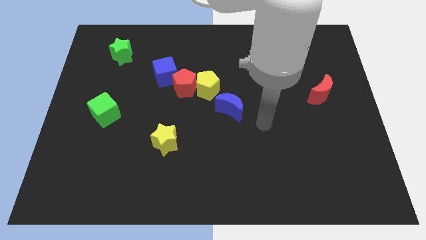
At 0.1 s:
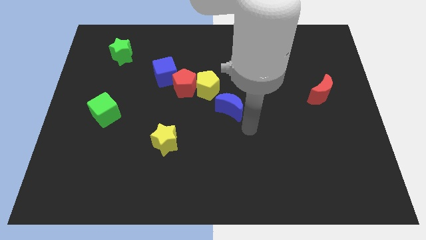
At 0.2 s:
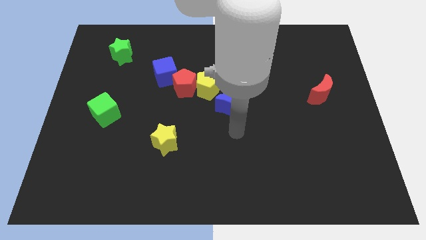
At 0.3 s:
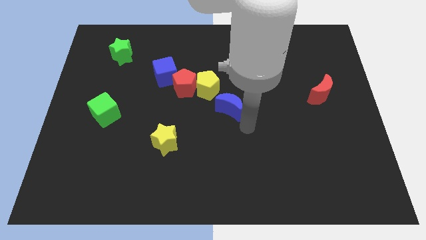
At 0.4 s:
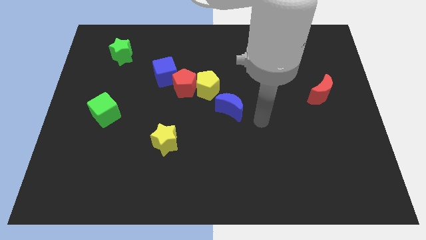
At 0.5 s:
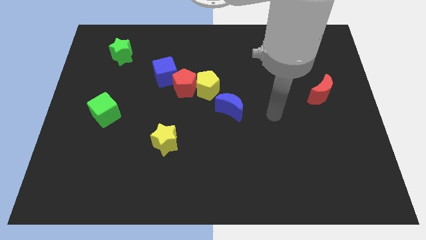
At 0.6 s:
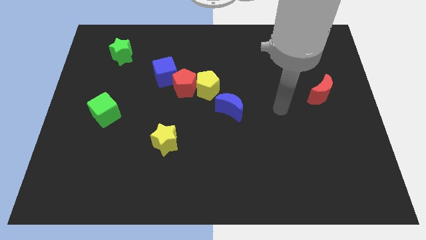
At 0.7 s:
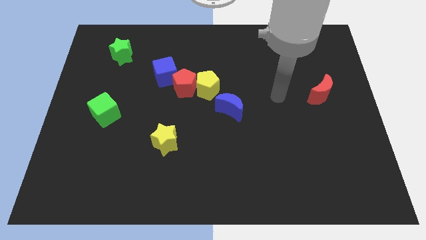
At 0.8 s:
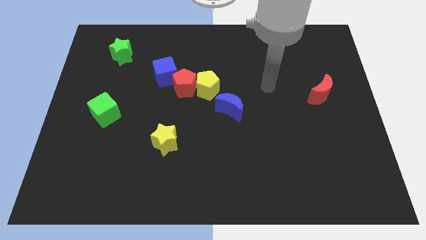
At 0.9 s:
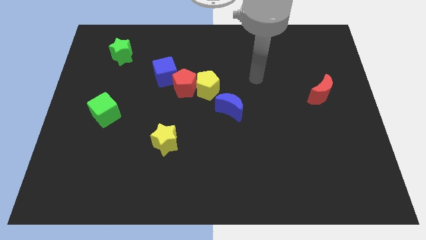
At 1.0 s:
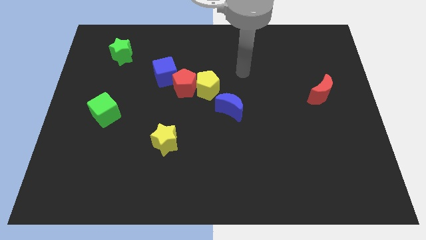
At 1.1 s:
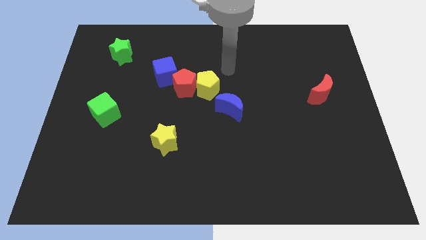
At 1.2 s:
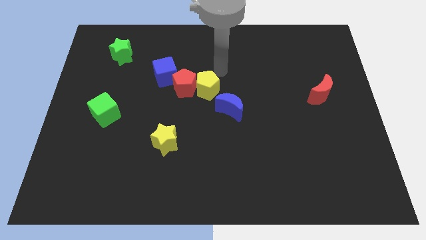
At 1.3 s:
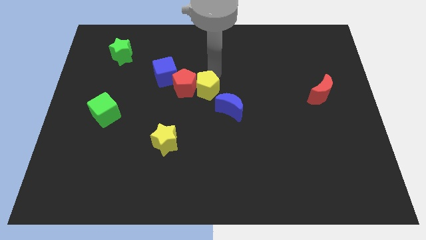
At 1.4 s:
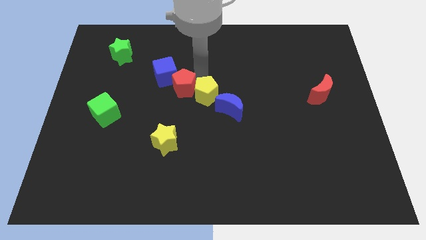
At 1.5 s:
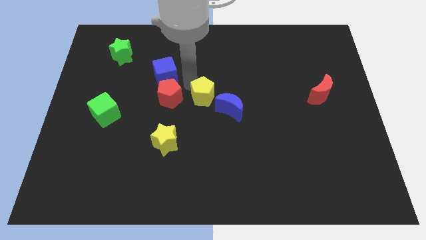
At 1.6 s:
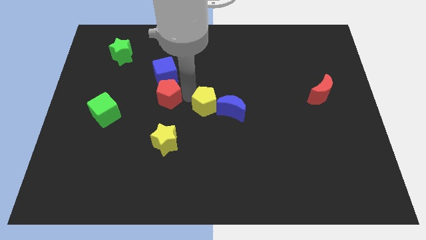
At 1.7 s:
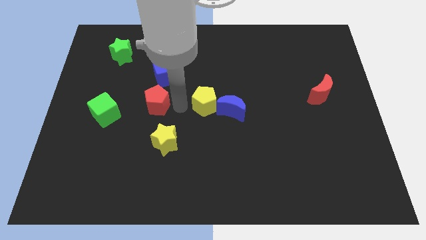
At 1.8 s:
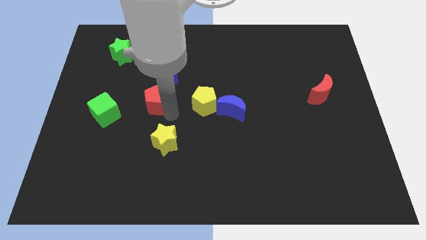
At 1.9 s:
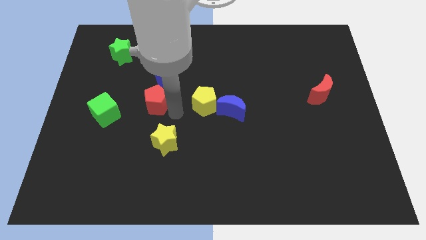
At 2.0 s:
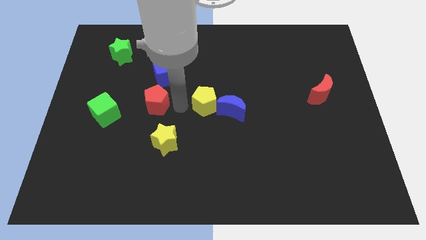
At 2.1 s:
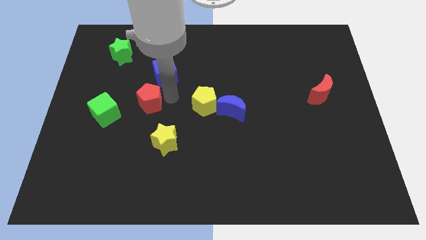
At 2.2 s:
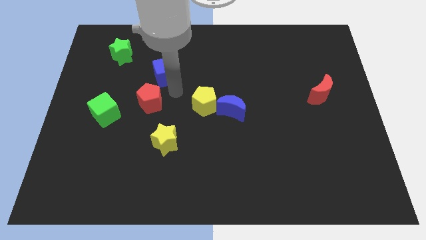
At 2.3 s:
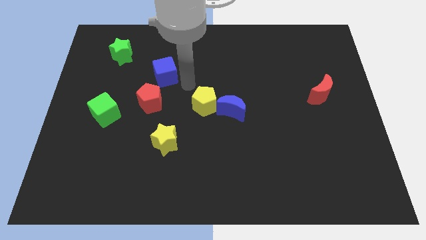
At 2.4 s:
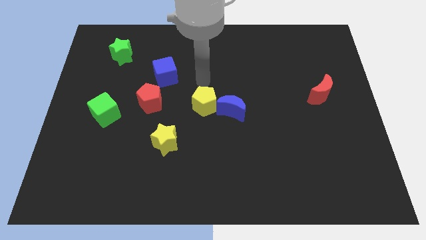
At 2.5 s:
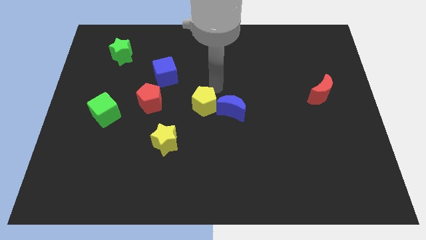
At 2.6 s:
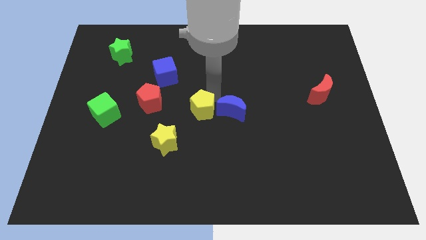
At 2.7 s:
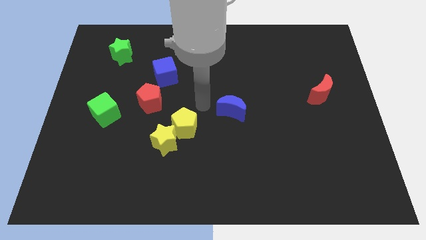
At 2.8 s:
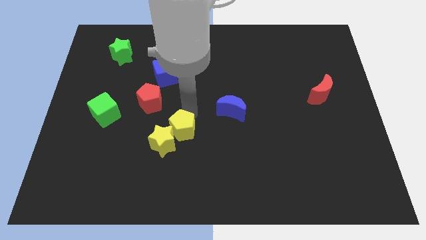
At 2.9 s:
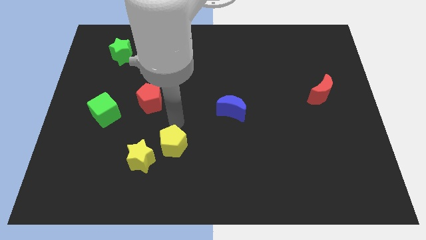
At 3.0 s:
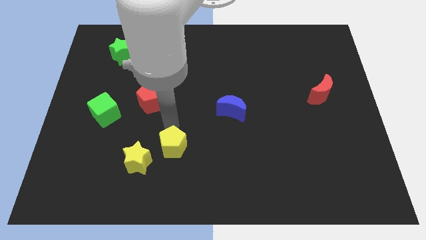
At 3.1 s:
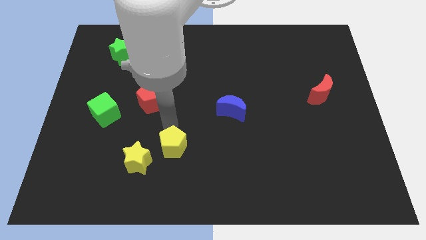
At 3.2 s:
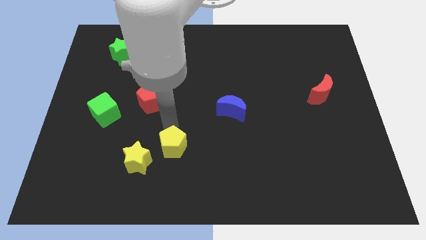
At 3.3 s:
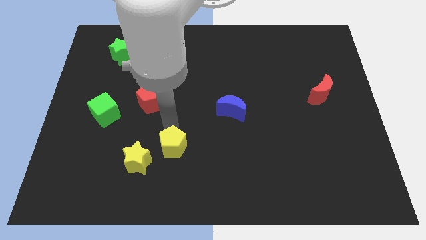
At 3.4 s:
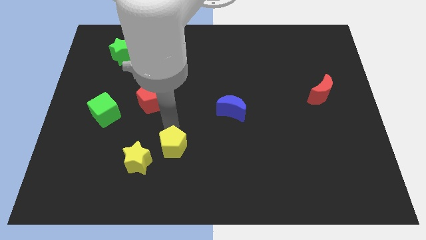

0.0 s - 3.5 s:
push the yellow pentagon into the yellow star

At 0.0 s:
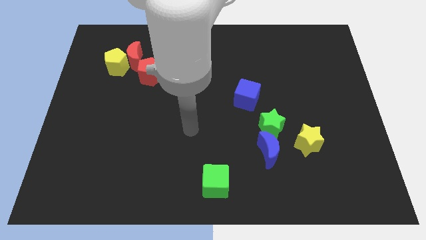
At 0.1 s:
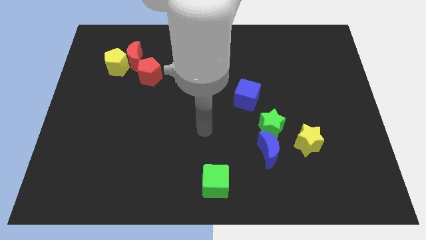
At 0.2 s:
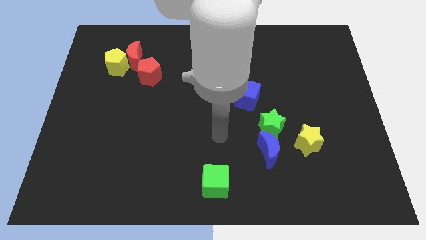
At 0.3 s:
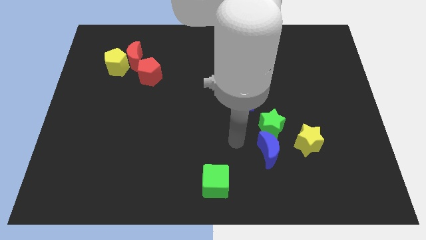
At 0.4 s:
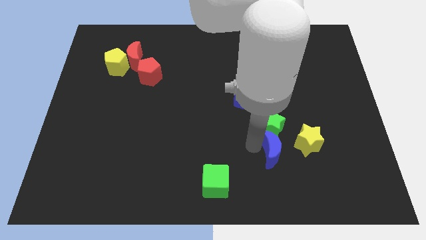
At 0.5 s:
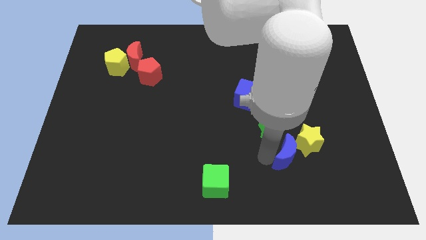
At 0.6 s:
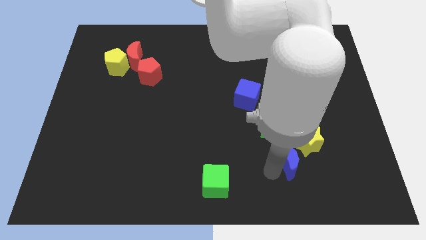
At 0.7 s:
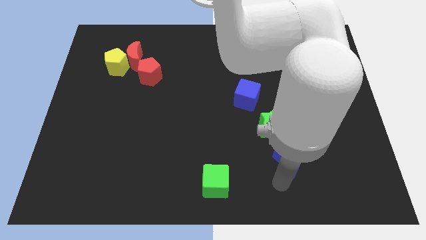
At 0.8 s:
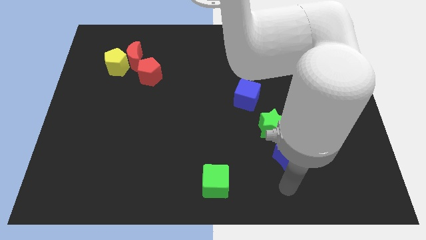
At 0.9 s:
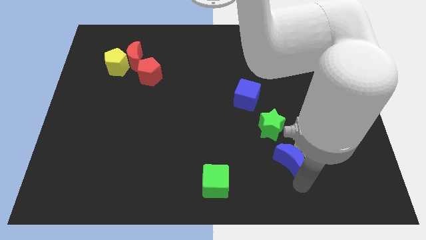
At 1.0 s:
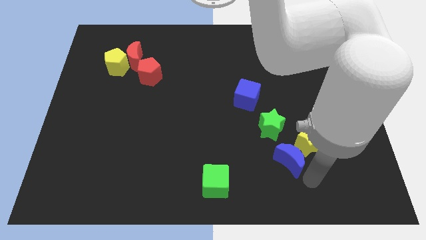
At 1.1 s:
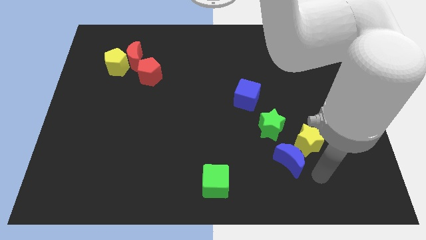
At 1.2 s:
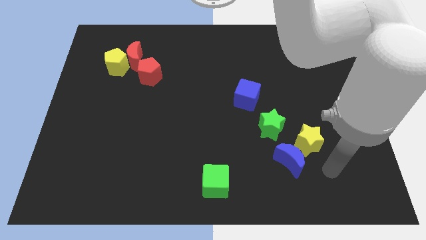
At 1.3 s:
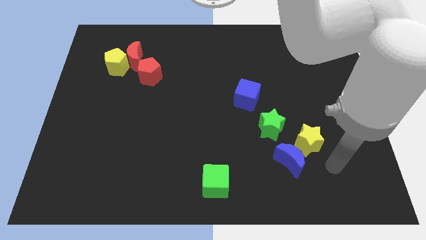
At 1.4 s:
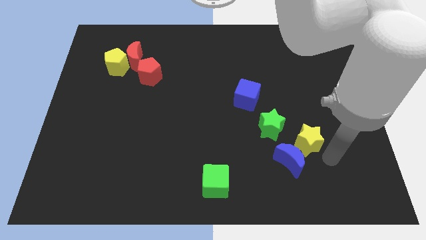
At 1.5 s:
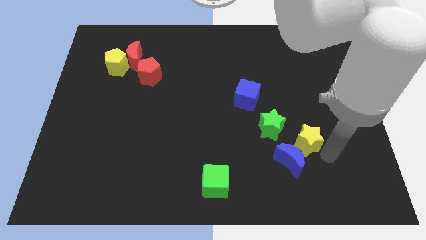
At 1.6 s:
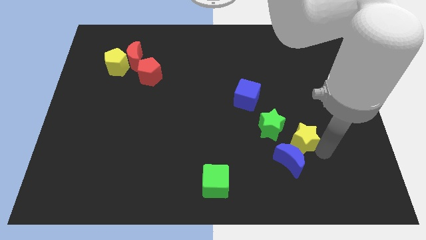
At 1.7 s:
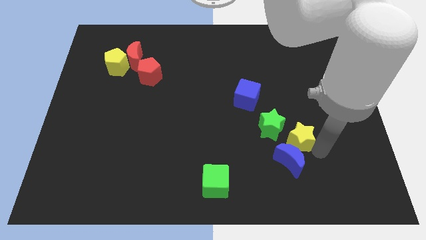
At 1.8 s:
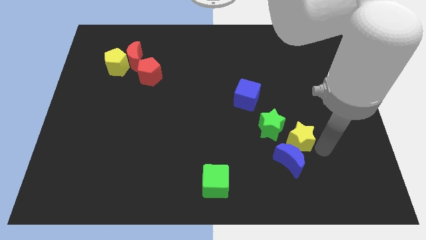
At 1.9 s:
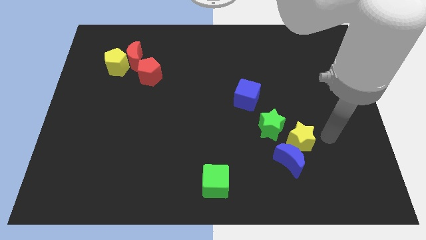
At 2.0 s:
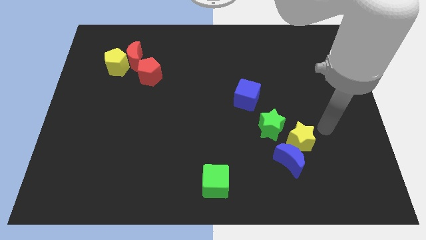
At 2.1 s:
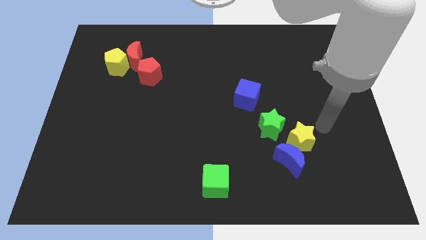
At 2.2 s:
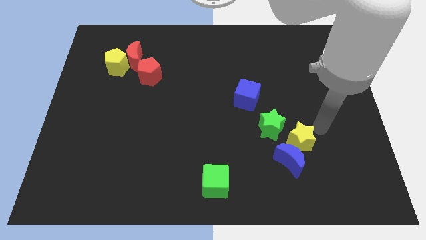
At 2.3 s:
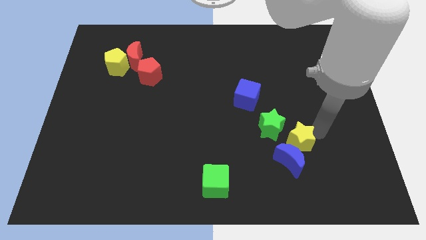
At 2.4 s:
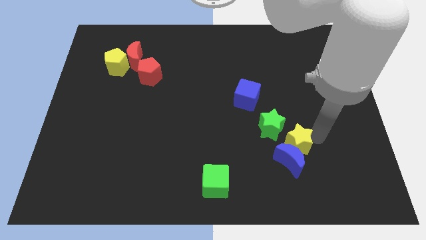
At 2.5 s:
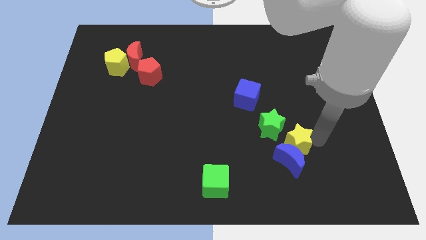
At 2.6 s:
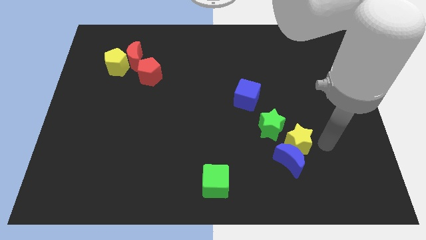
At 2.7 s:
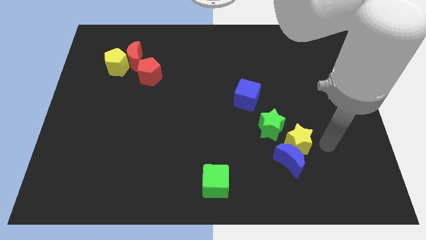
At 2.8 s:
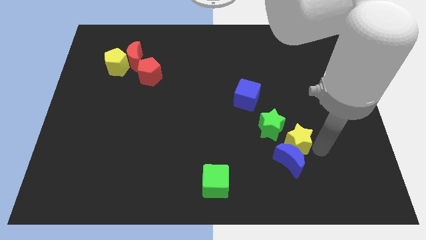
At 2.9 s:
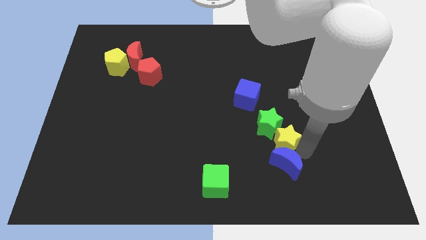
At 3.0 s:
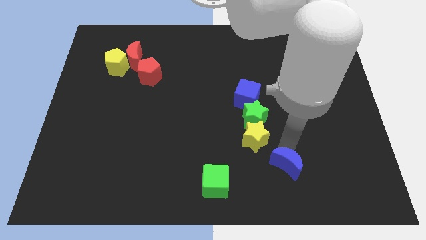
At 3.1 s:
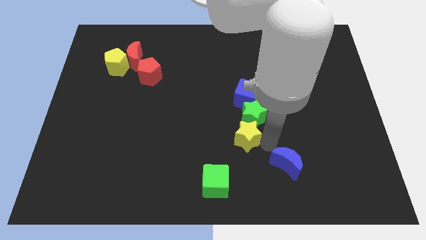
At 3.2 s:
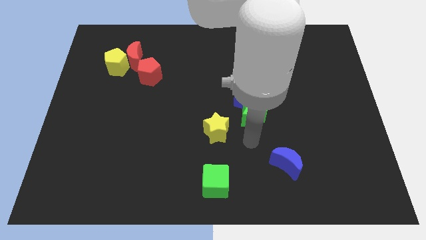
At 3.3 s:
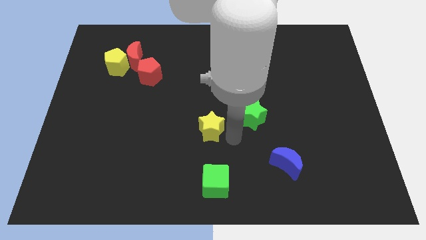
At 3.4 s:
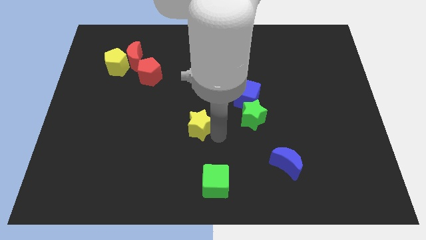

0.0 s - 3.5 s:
move the yellow star to the center

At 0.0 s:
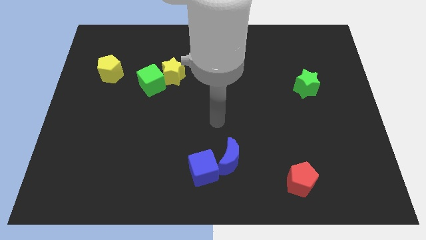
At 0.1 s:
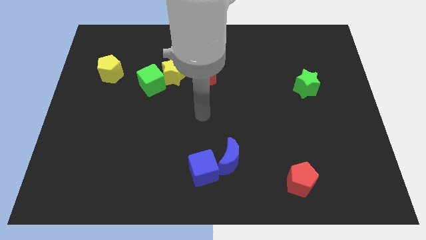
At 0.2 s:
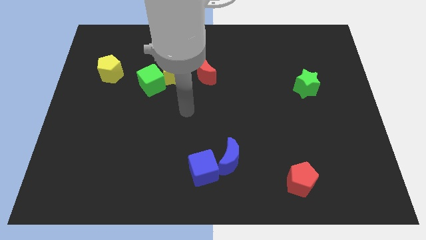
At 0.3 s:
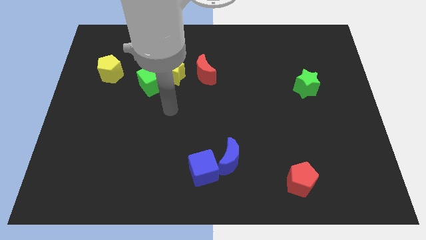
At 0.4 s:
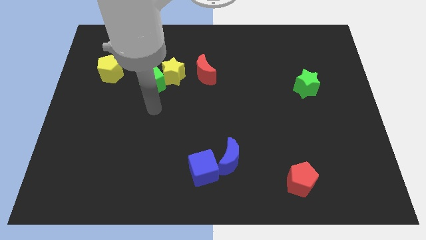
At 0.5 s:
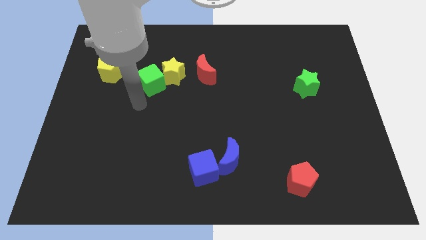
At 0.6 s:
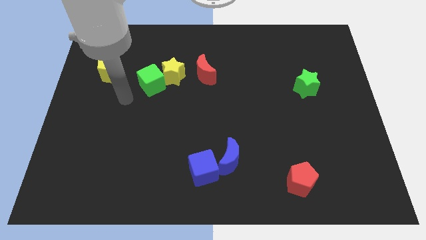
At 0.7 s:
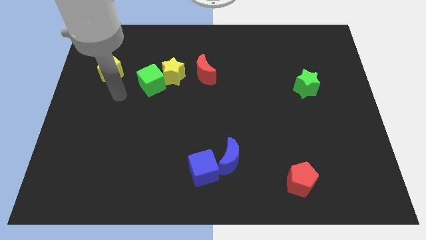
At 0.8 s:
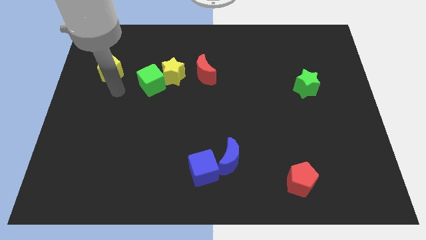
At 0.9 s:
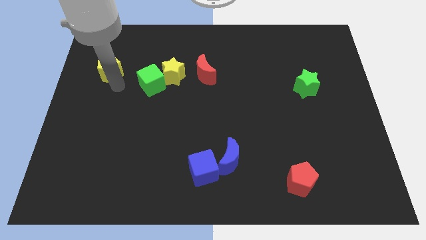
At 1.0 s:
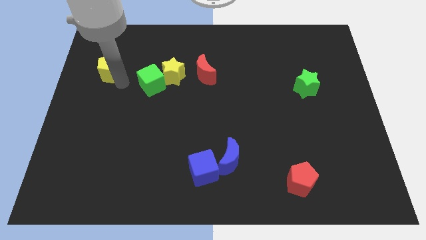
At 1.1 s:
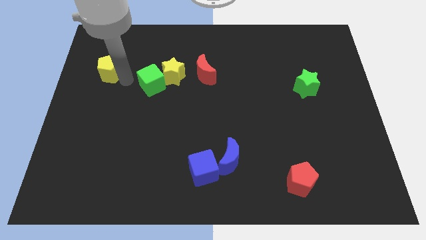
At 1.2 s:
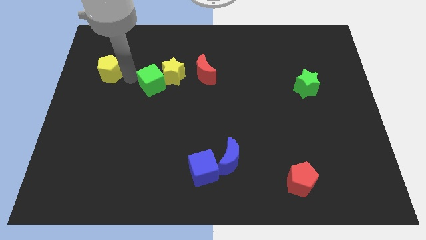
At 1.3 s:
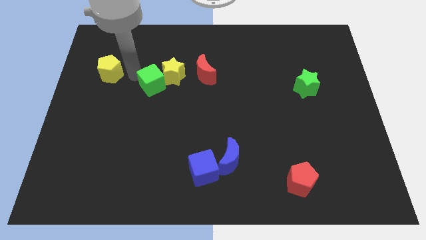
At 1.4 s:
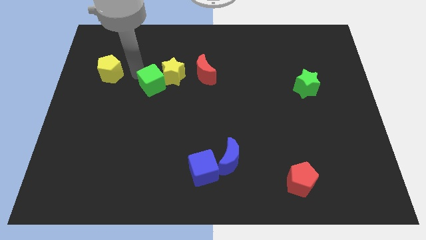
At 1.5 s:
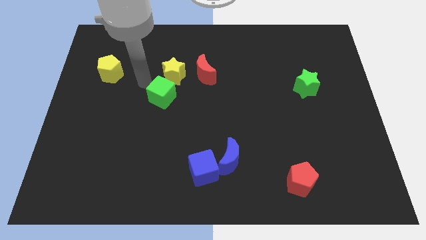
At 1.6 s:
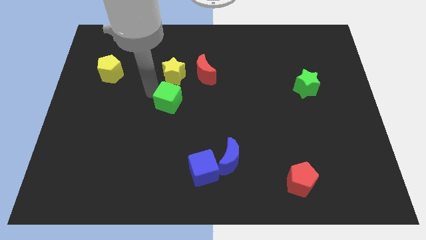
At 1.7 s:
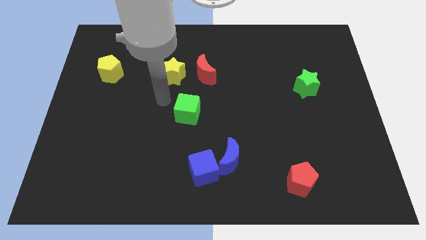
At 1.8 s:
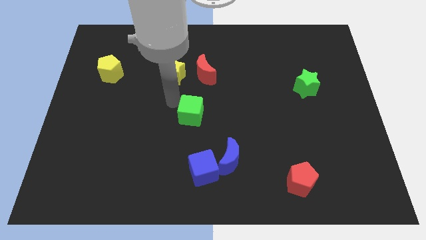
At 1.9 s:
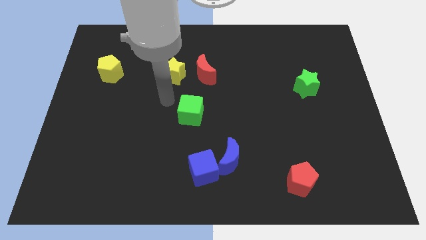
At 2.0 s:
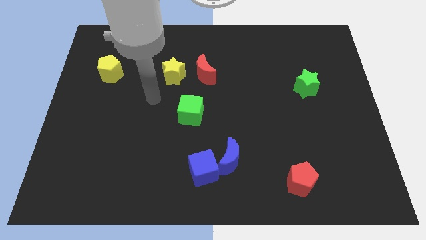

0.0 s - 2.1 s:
separate the green cube and yellow star
